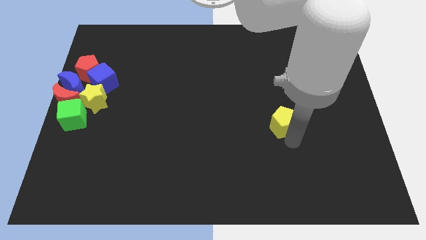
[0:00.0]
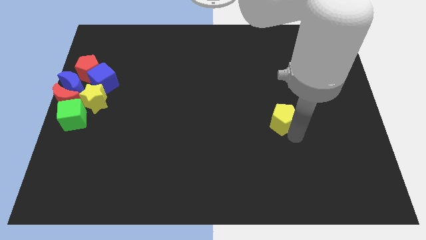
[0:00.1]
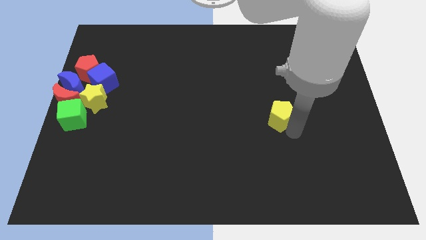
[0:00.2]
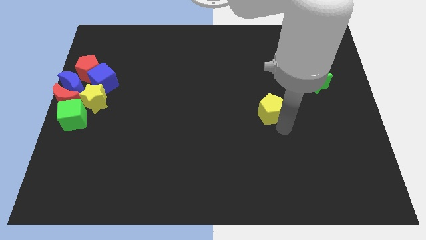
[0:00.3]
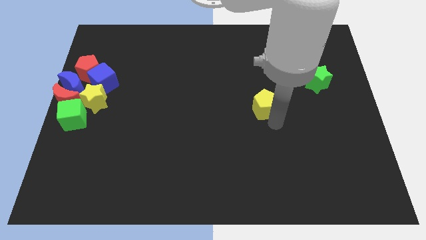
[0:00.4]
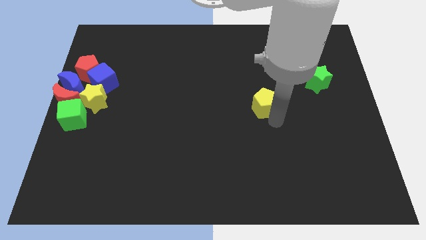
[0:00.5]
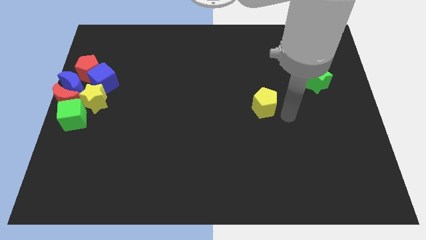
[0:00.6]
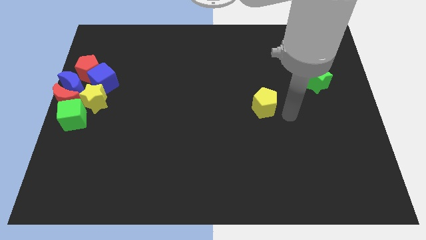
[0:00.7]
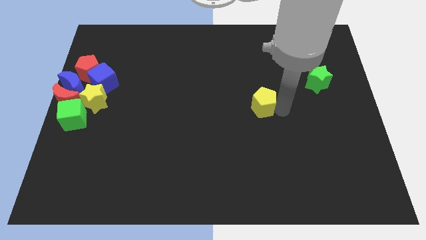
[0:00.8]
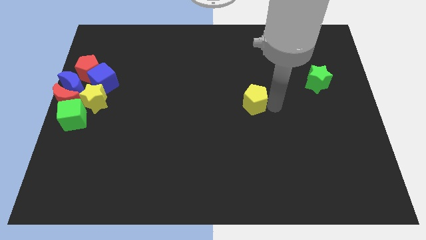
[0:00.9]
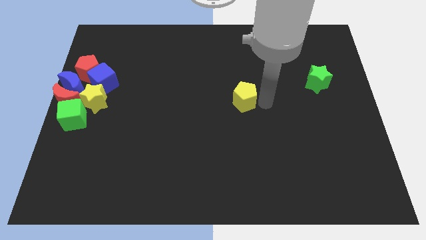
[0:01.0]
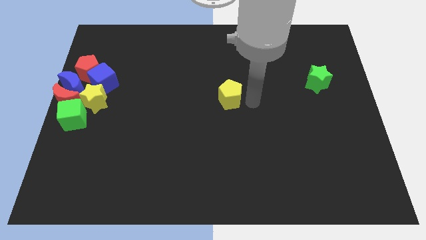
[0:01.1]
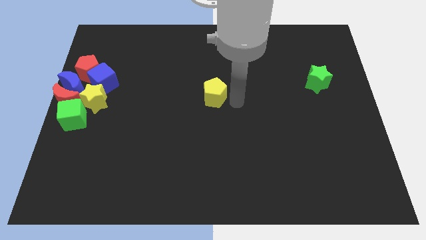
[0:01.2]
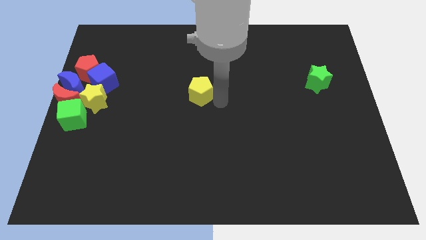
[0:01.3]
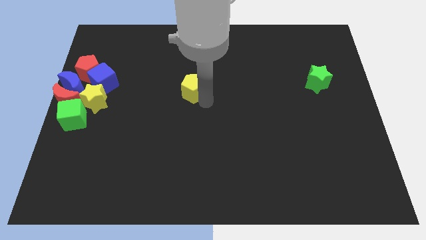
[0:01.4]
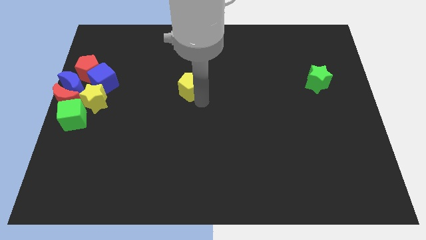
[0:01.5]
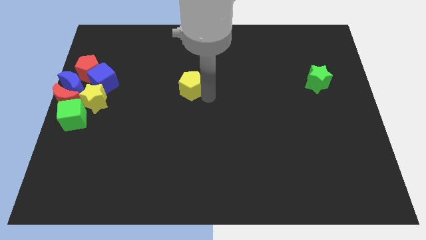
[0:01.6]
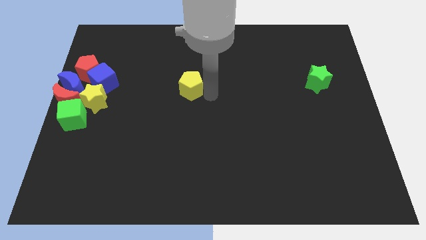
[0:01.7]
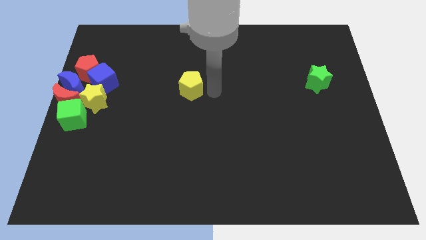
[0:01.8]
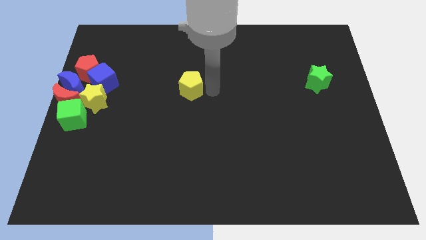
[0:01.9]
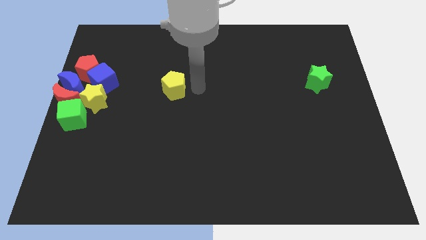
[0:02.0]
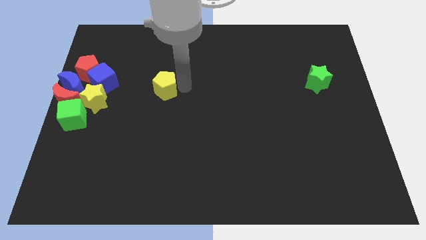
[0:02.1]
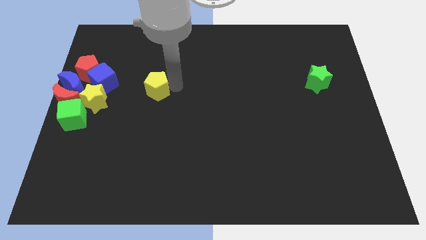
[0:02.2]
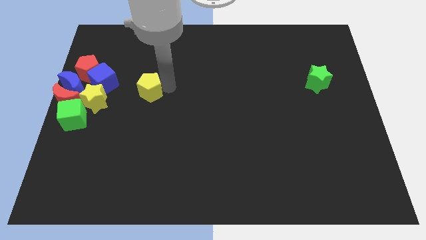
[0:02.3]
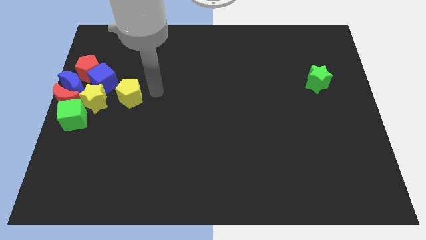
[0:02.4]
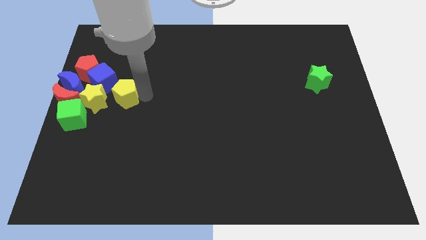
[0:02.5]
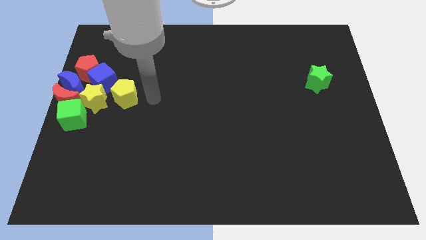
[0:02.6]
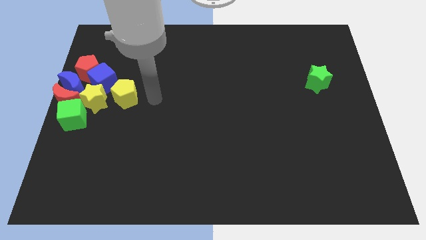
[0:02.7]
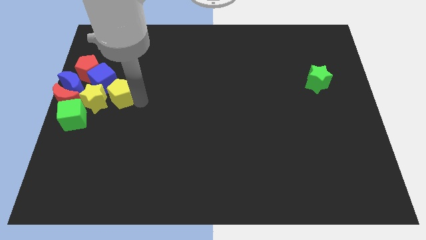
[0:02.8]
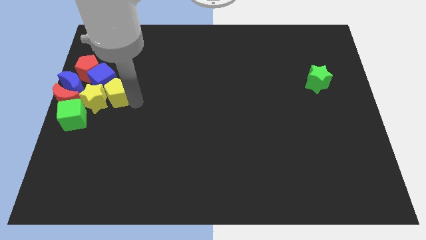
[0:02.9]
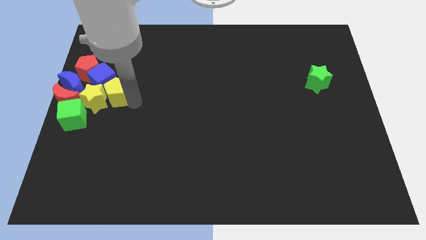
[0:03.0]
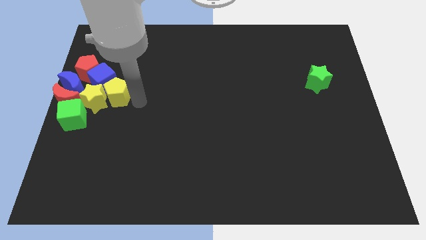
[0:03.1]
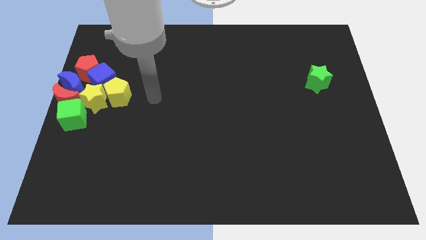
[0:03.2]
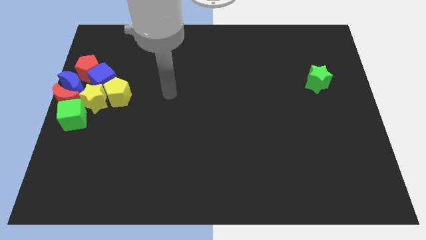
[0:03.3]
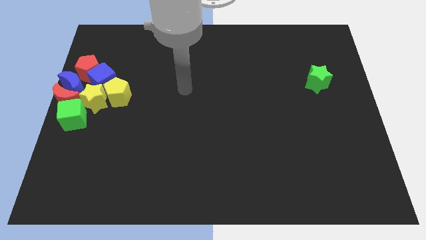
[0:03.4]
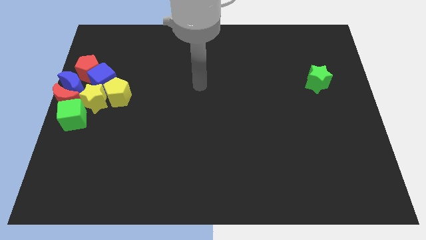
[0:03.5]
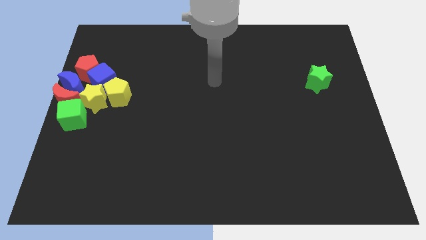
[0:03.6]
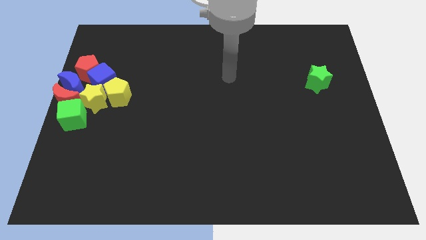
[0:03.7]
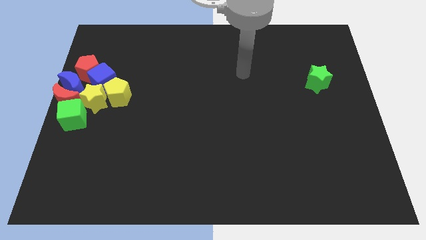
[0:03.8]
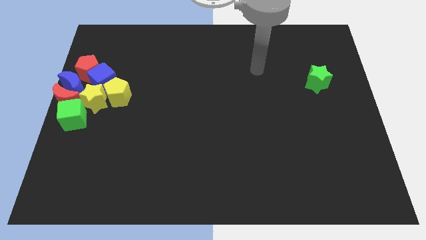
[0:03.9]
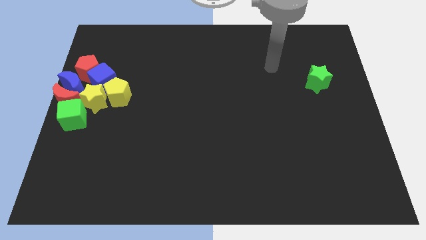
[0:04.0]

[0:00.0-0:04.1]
add yellow pentagon into yellow star

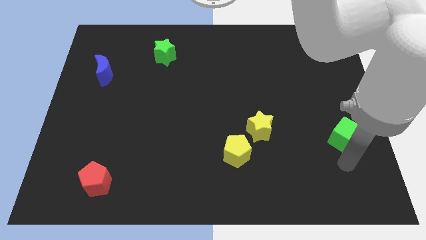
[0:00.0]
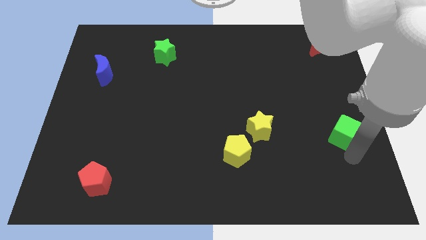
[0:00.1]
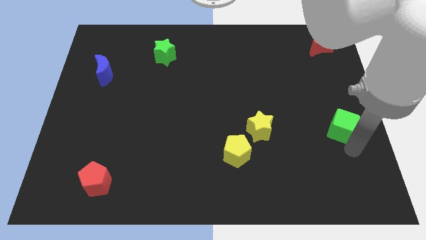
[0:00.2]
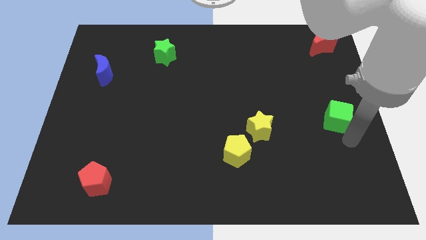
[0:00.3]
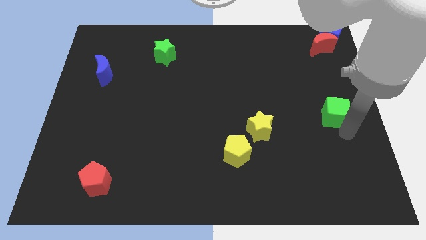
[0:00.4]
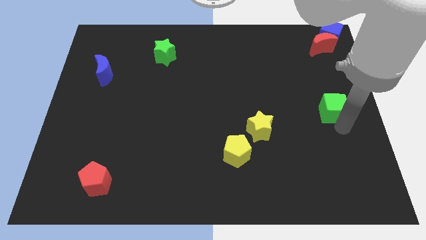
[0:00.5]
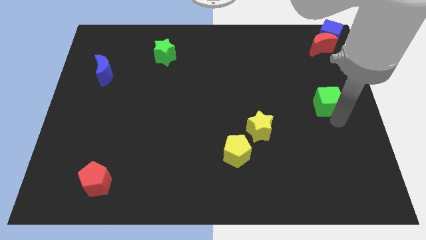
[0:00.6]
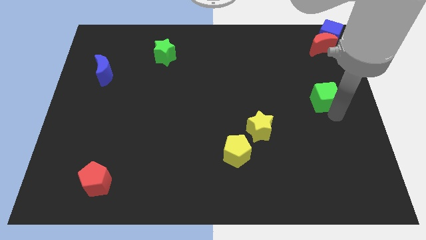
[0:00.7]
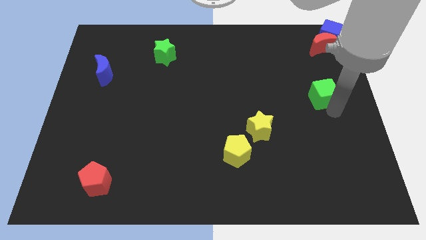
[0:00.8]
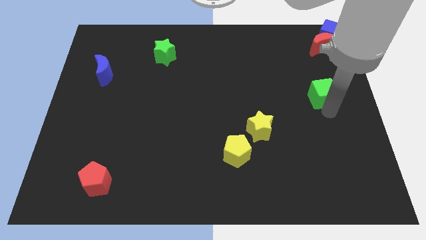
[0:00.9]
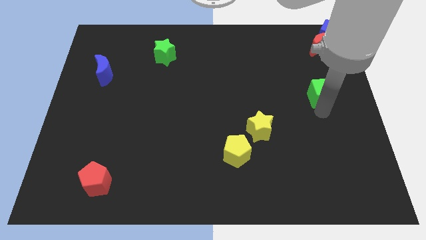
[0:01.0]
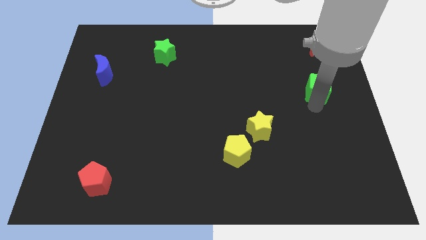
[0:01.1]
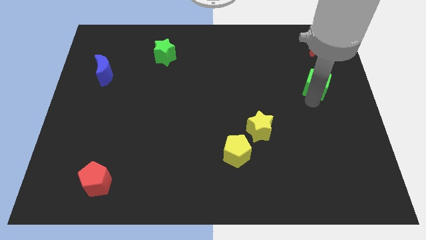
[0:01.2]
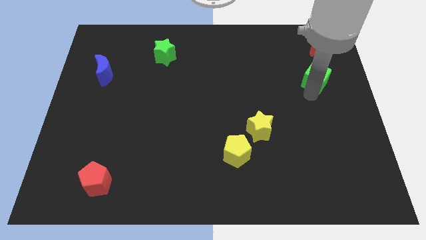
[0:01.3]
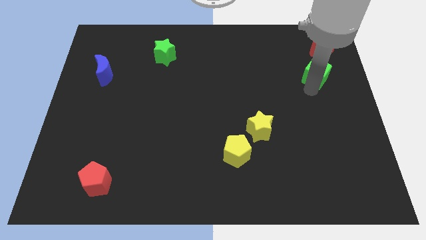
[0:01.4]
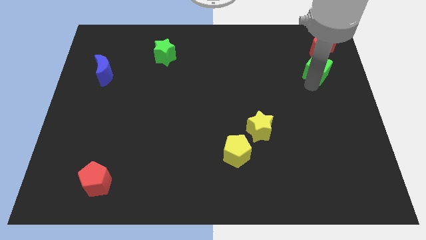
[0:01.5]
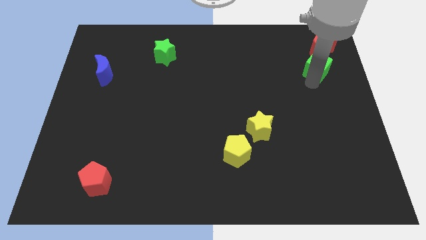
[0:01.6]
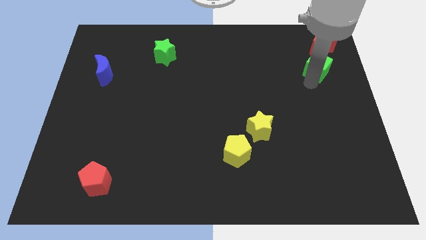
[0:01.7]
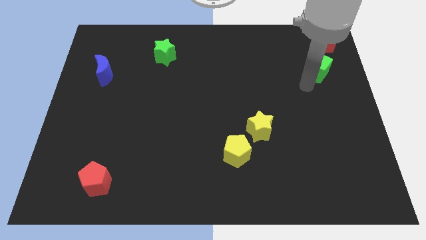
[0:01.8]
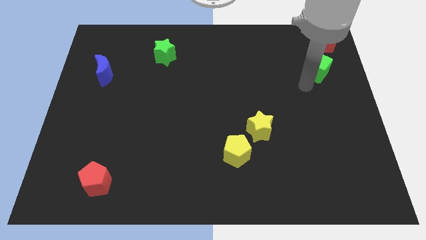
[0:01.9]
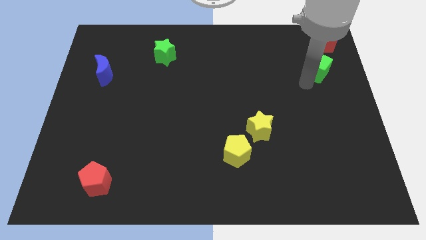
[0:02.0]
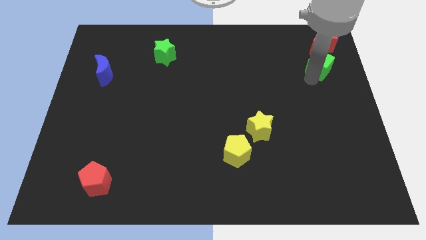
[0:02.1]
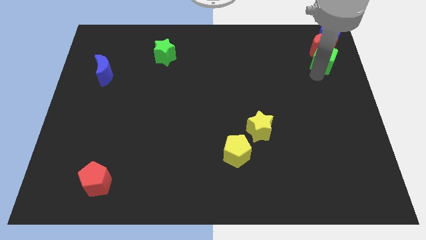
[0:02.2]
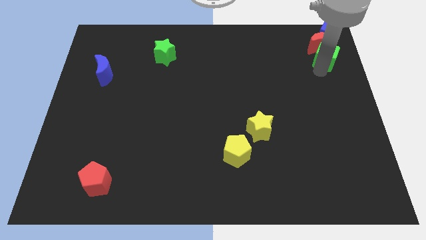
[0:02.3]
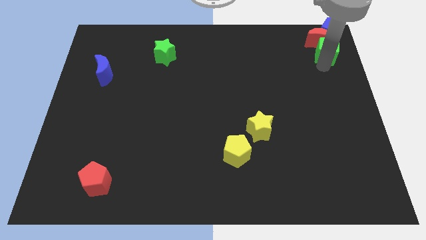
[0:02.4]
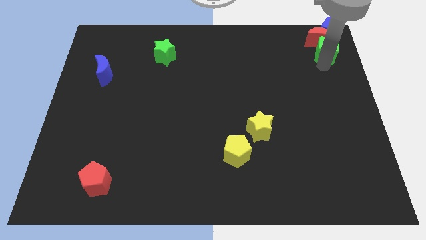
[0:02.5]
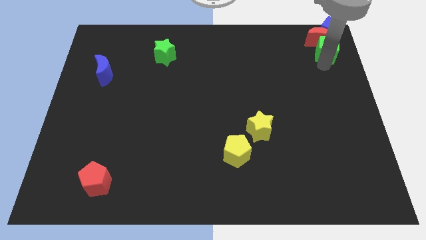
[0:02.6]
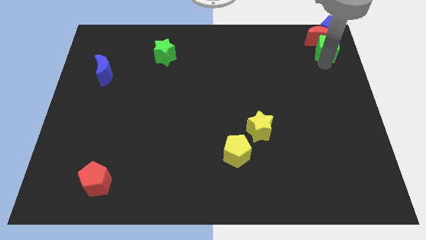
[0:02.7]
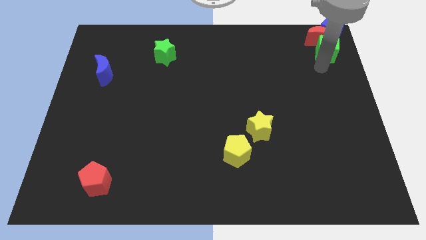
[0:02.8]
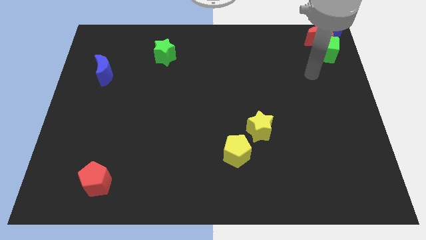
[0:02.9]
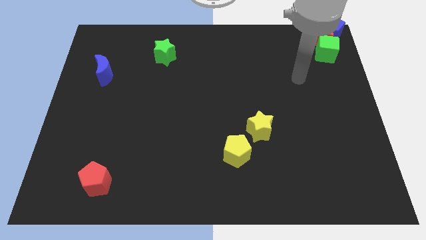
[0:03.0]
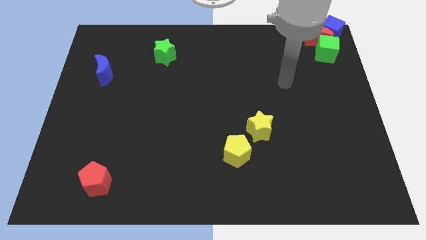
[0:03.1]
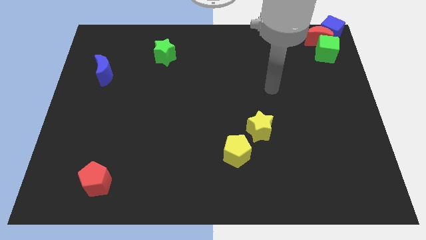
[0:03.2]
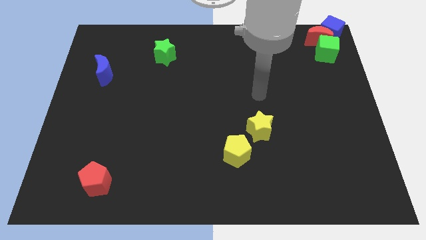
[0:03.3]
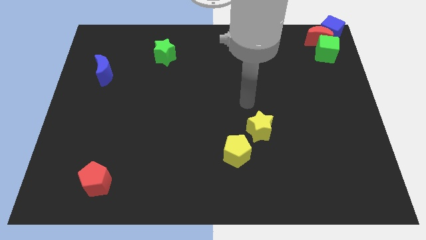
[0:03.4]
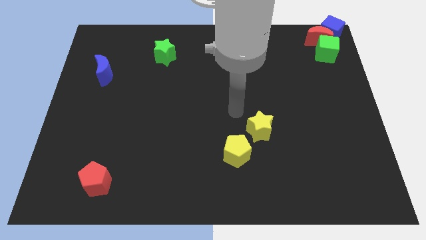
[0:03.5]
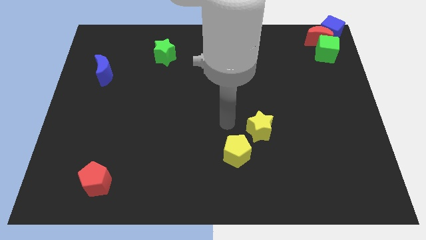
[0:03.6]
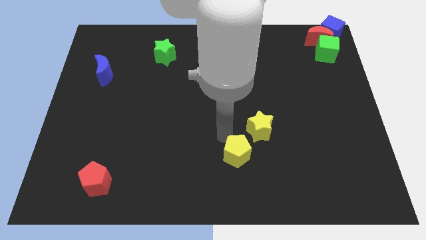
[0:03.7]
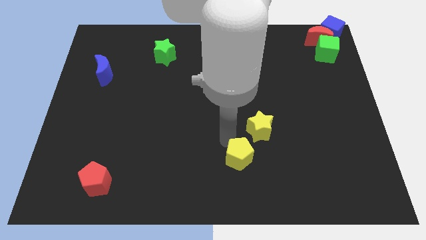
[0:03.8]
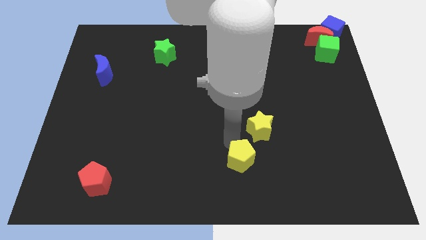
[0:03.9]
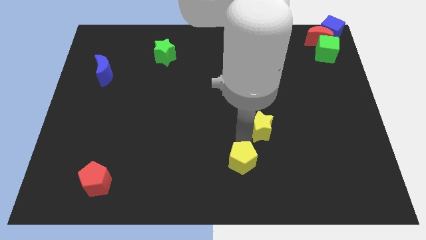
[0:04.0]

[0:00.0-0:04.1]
drag the green cube and place it below the red moon

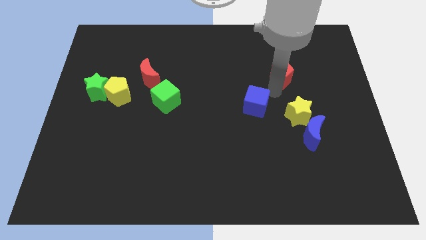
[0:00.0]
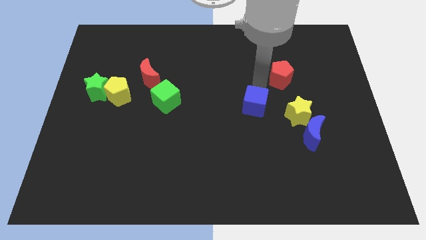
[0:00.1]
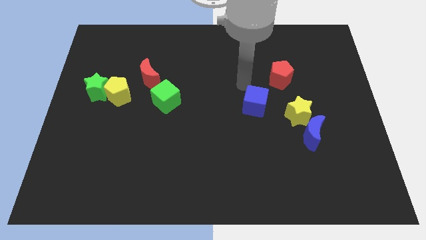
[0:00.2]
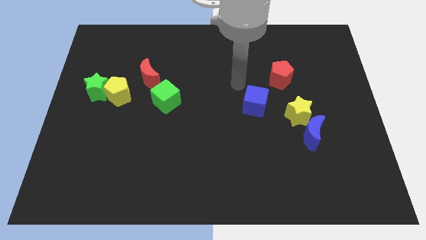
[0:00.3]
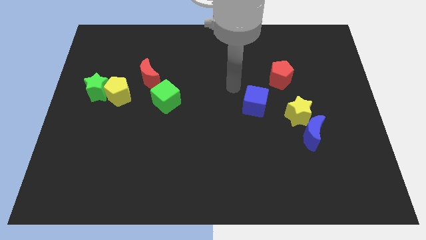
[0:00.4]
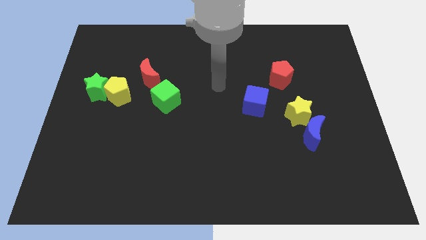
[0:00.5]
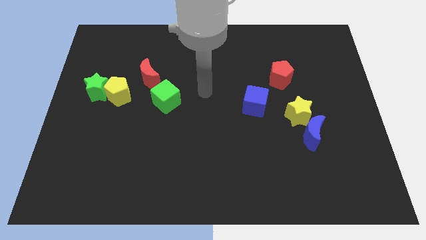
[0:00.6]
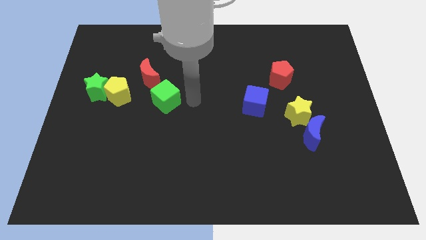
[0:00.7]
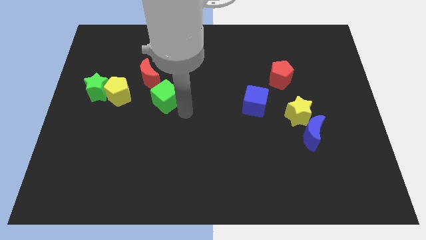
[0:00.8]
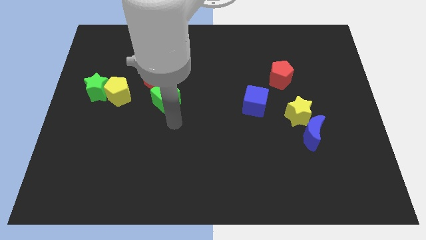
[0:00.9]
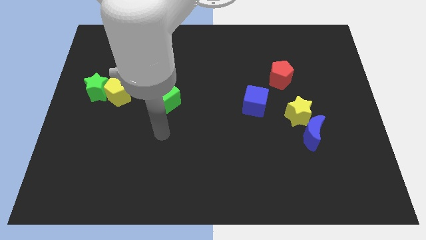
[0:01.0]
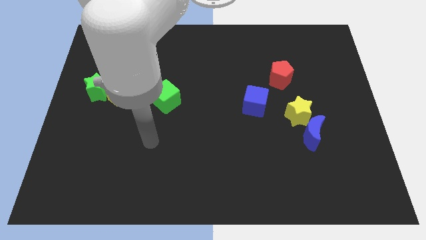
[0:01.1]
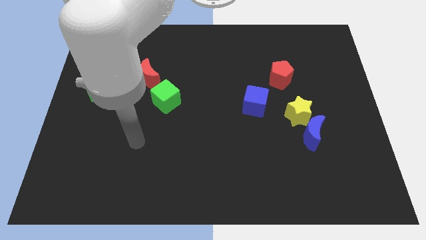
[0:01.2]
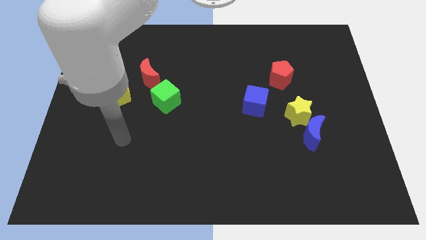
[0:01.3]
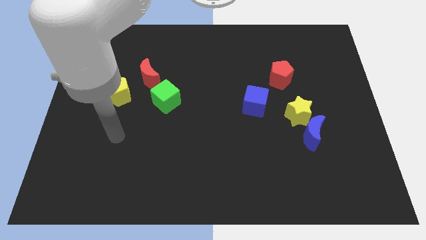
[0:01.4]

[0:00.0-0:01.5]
go to the bottom side of the yellow pentagon
